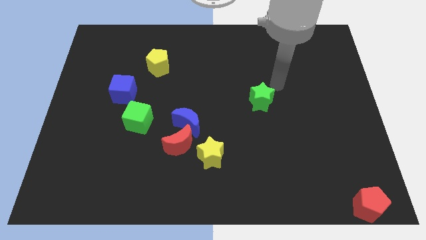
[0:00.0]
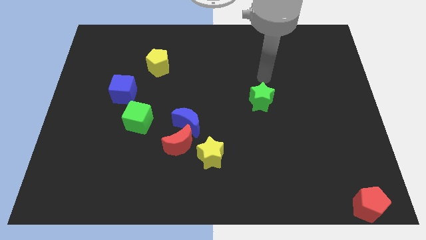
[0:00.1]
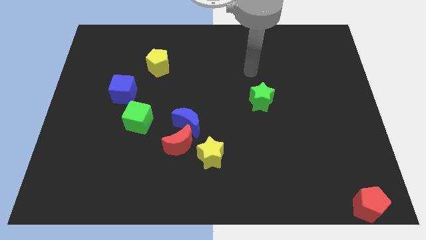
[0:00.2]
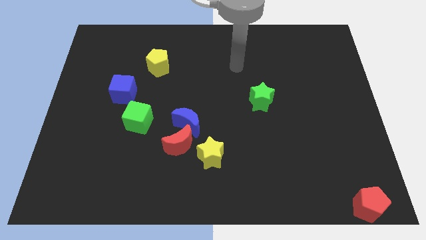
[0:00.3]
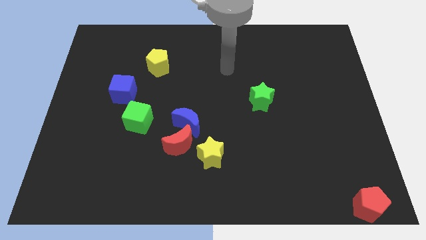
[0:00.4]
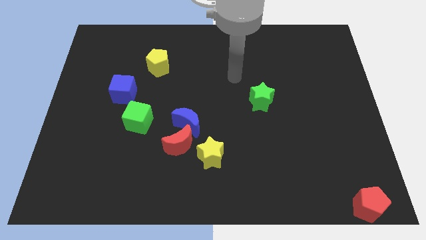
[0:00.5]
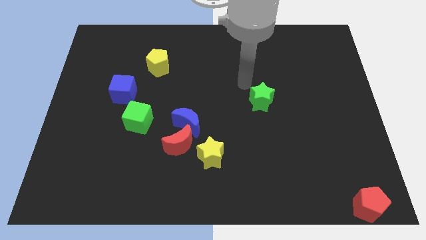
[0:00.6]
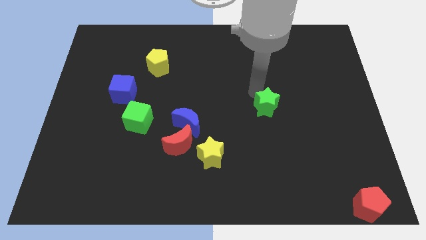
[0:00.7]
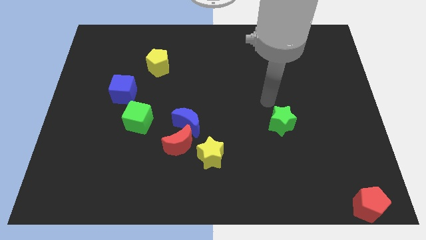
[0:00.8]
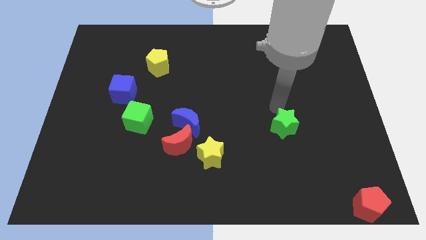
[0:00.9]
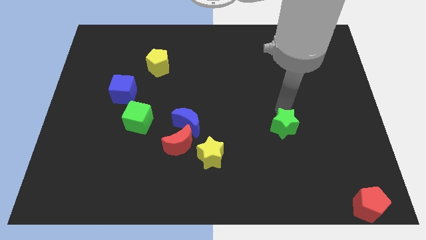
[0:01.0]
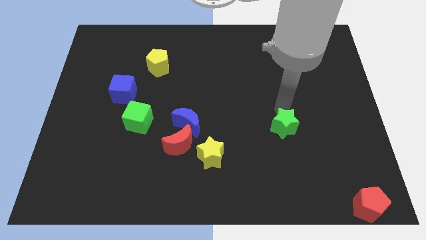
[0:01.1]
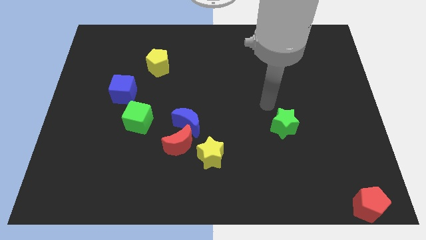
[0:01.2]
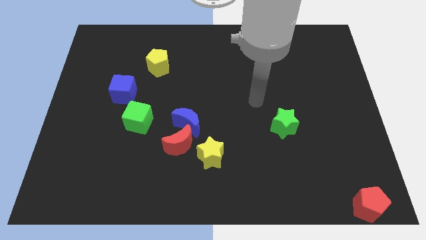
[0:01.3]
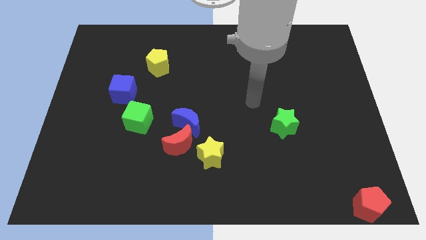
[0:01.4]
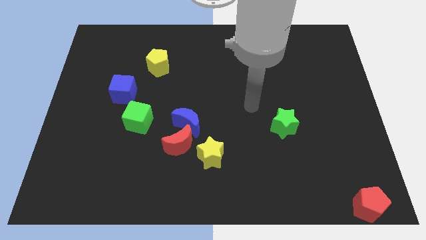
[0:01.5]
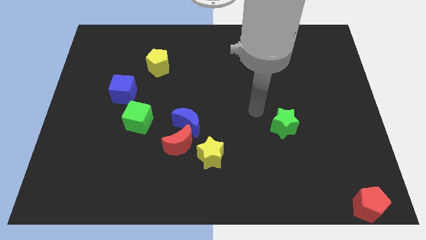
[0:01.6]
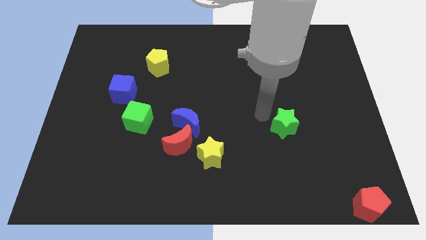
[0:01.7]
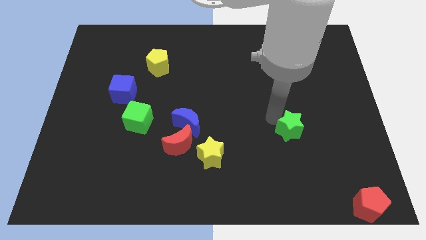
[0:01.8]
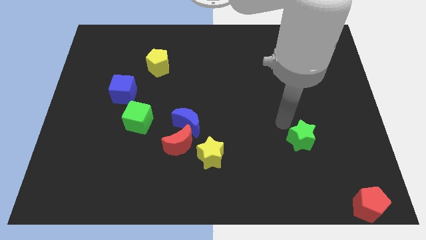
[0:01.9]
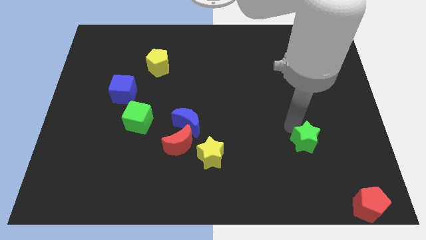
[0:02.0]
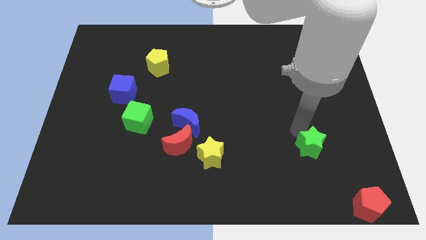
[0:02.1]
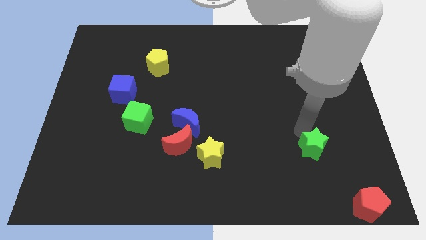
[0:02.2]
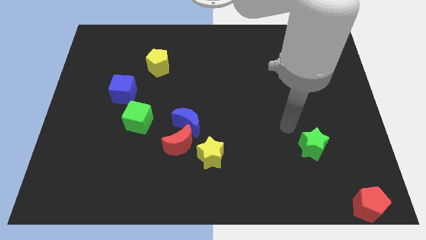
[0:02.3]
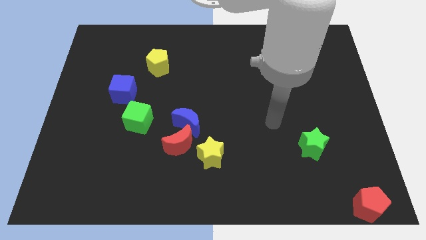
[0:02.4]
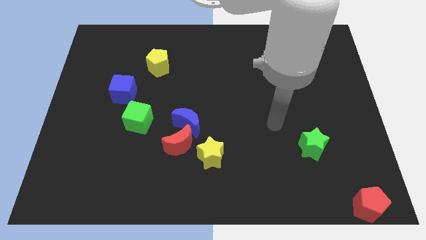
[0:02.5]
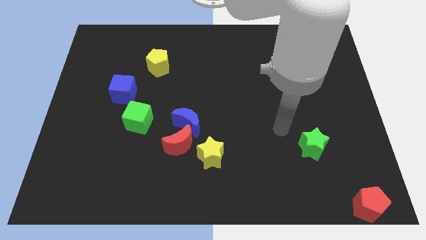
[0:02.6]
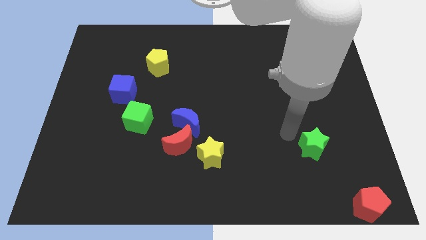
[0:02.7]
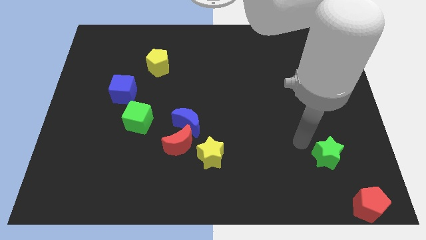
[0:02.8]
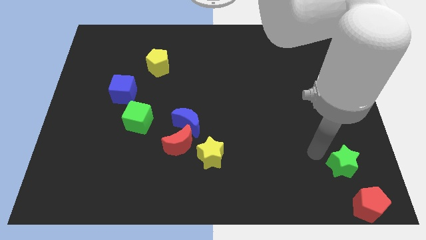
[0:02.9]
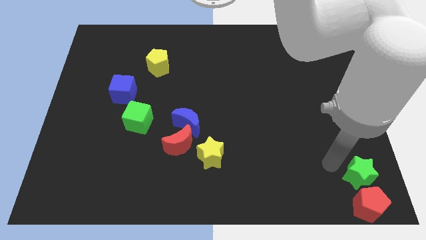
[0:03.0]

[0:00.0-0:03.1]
push green star towards red pentagon

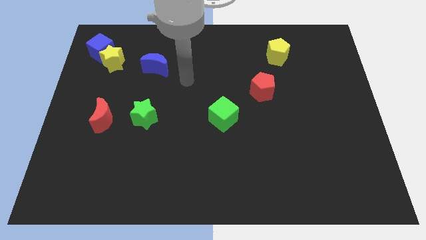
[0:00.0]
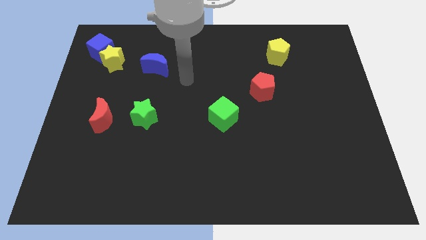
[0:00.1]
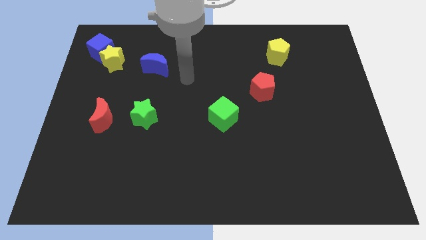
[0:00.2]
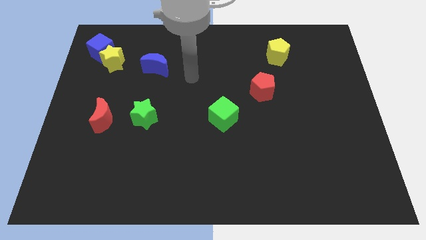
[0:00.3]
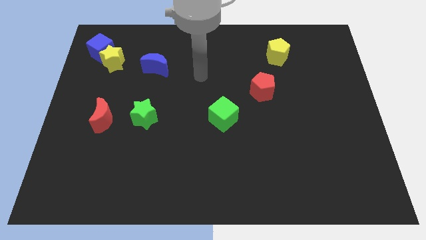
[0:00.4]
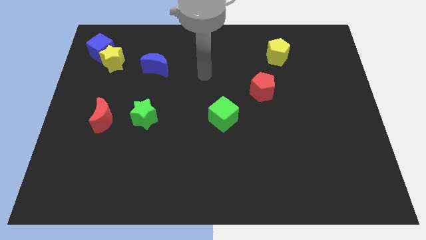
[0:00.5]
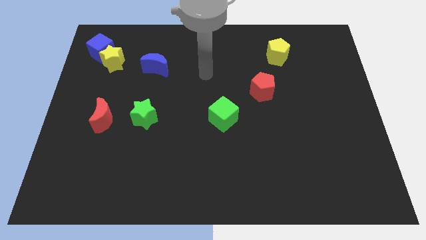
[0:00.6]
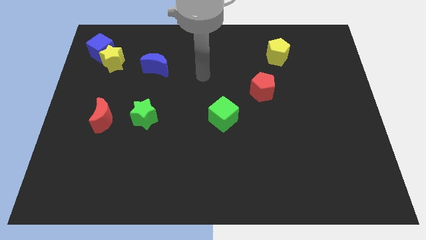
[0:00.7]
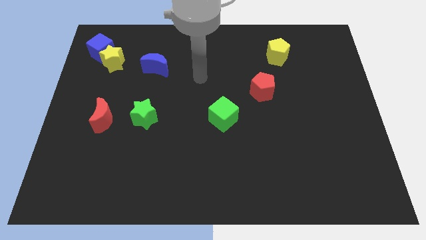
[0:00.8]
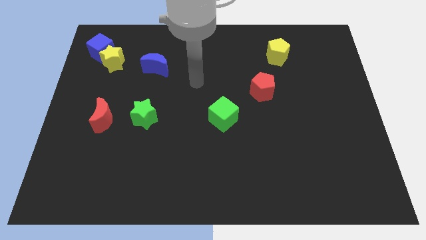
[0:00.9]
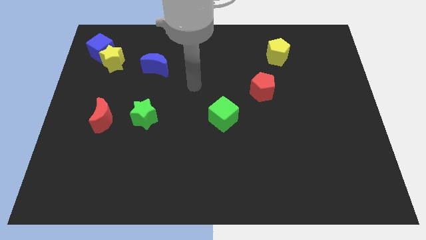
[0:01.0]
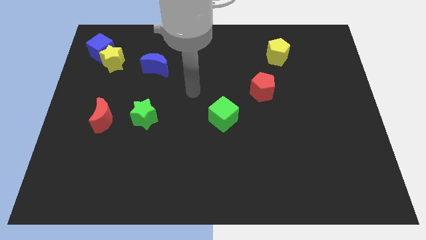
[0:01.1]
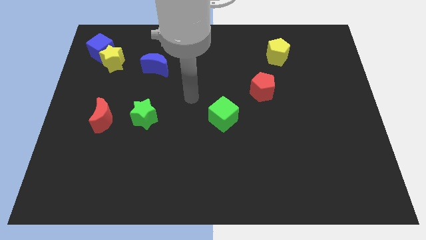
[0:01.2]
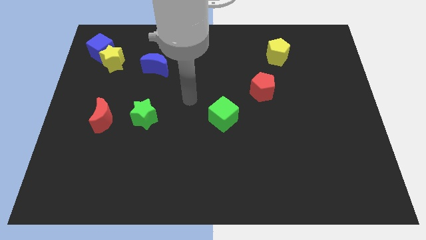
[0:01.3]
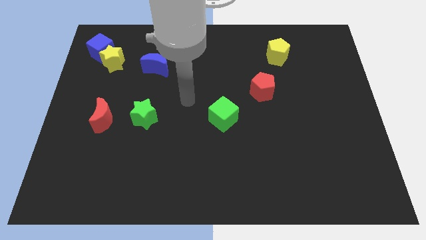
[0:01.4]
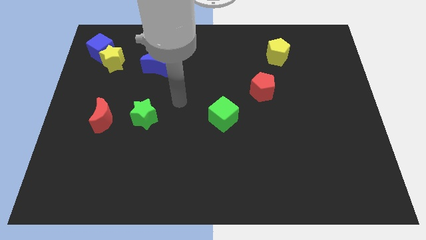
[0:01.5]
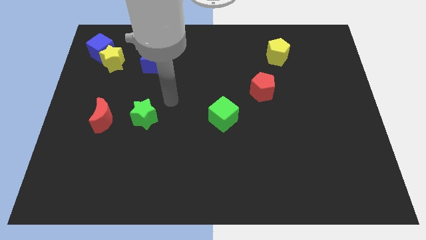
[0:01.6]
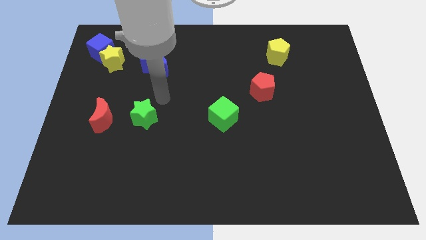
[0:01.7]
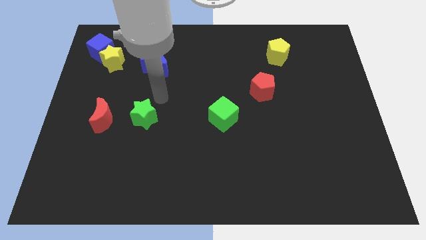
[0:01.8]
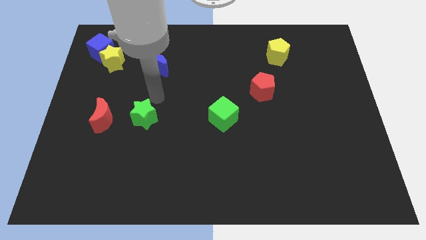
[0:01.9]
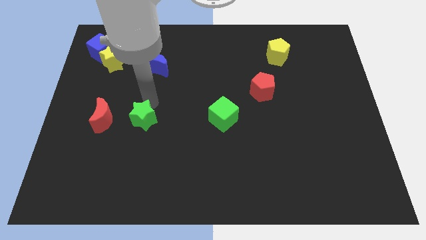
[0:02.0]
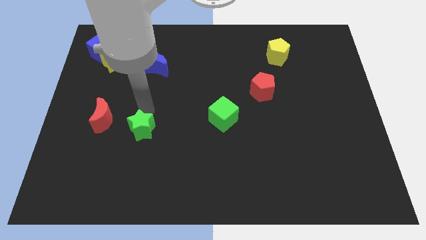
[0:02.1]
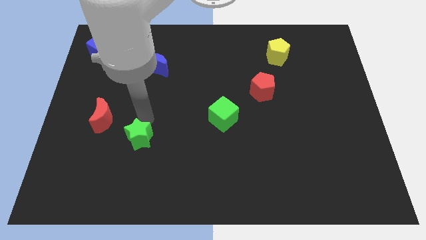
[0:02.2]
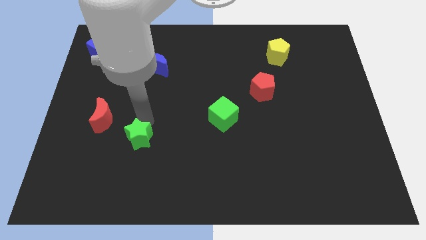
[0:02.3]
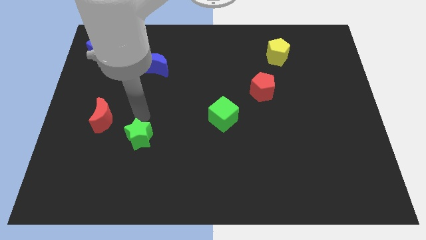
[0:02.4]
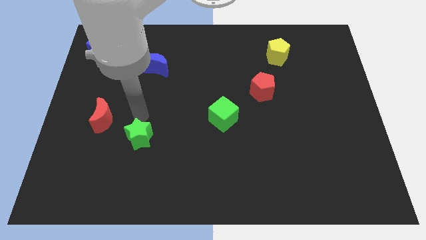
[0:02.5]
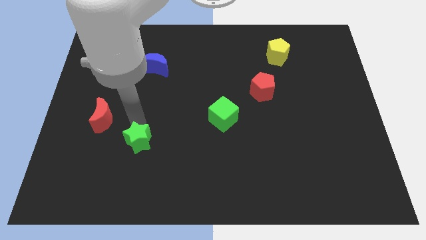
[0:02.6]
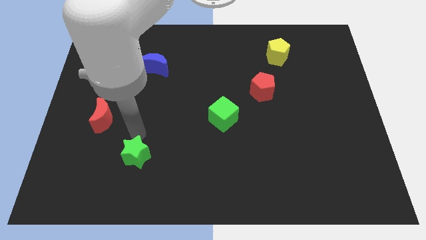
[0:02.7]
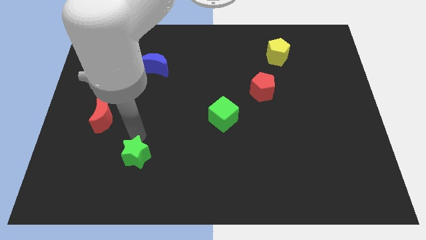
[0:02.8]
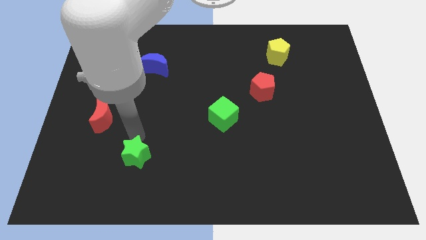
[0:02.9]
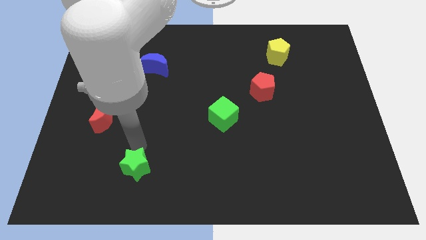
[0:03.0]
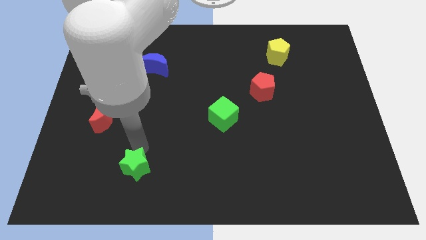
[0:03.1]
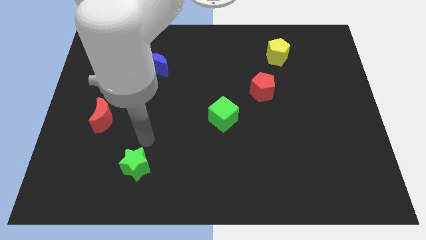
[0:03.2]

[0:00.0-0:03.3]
push the green star towards bottom of the board

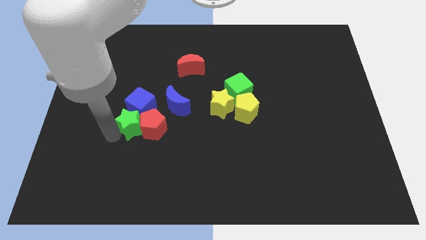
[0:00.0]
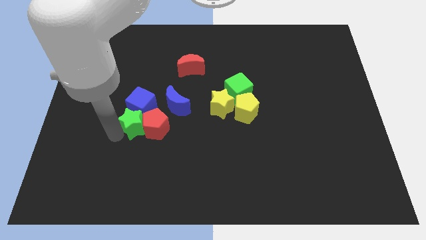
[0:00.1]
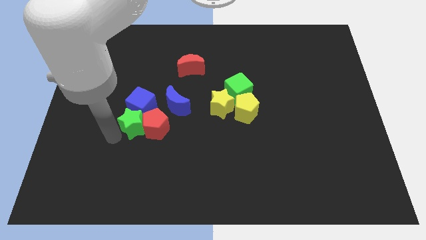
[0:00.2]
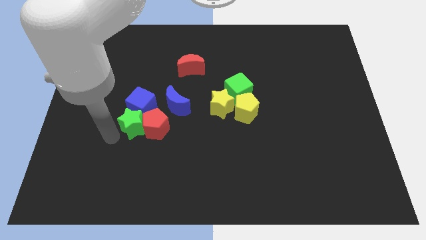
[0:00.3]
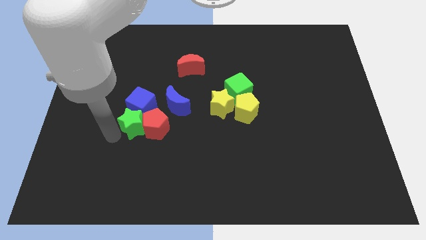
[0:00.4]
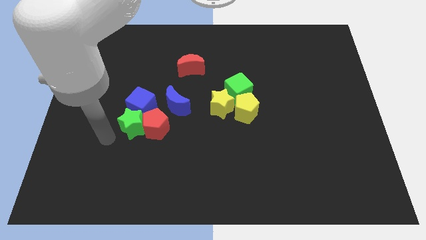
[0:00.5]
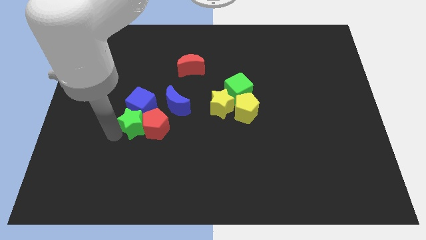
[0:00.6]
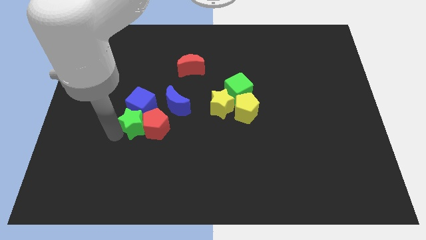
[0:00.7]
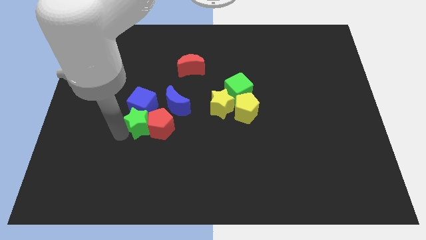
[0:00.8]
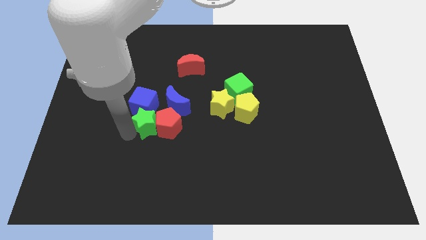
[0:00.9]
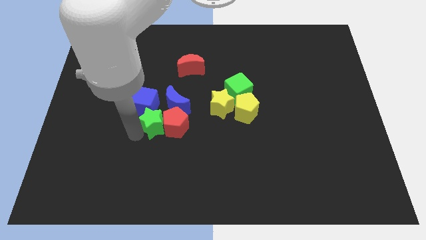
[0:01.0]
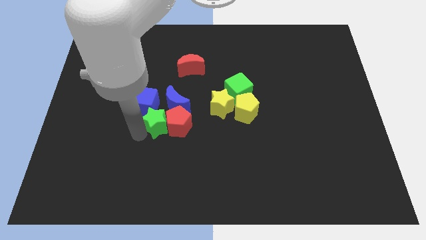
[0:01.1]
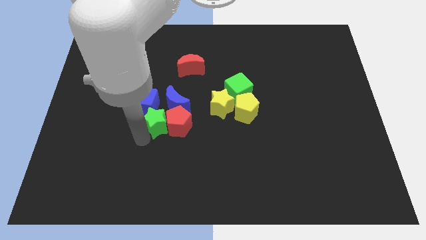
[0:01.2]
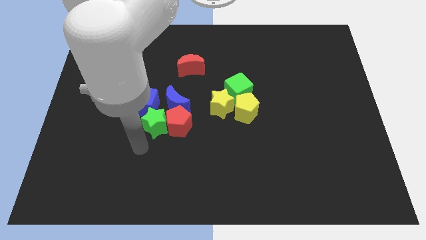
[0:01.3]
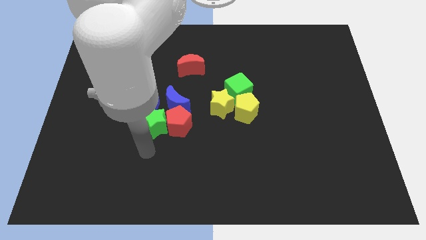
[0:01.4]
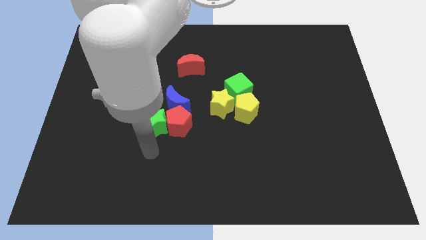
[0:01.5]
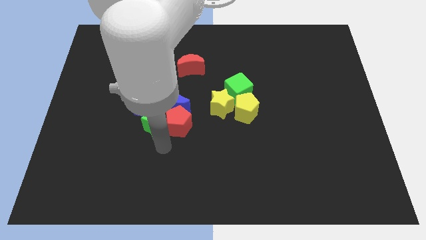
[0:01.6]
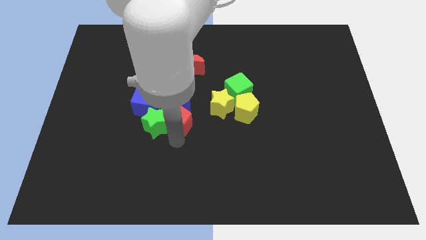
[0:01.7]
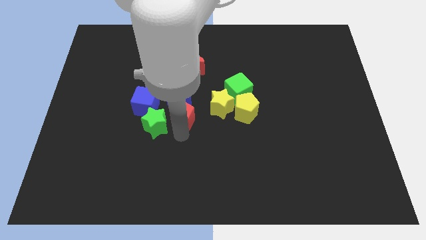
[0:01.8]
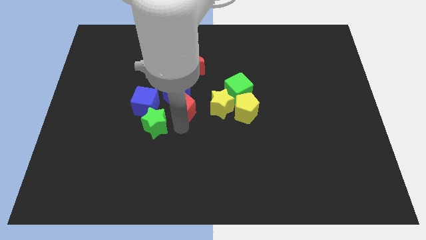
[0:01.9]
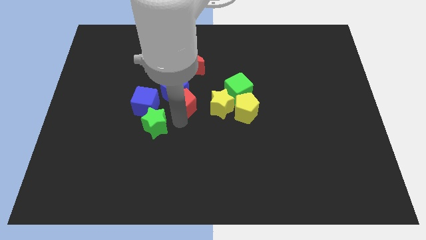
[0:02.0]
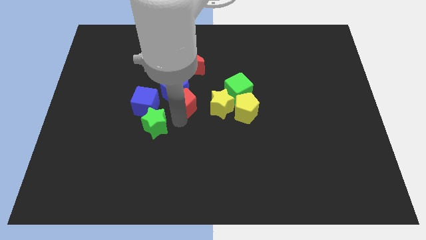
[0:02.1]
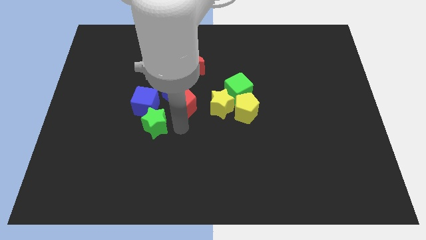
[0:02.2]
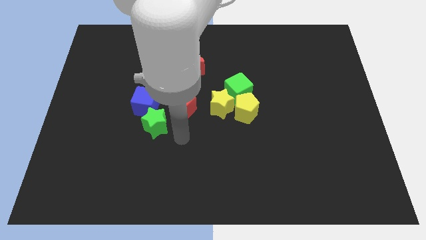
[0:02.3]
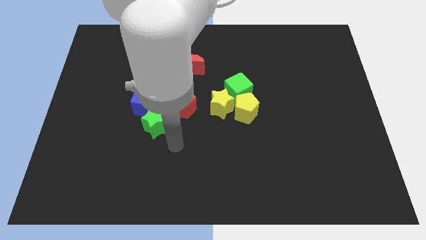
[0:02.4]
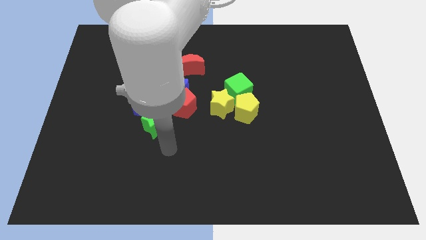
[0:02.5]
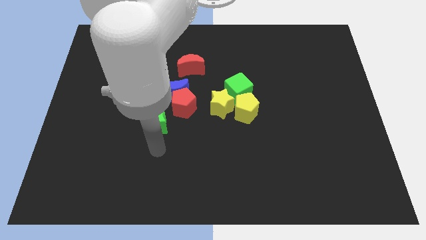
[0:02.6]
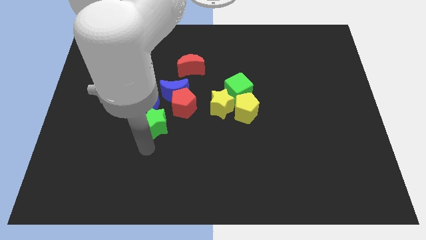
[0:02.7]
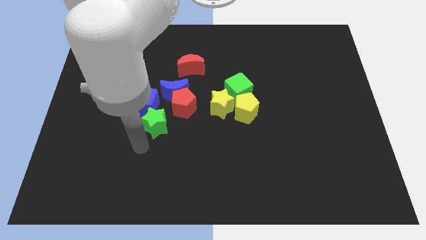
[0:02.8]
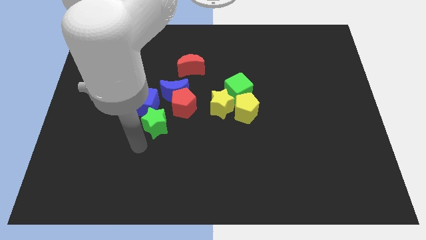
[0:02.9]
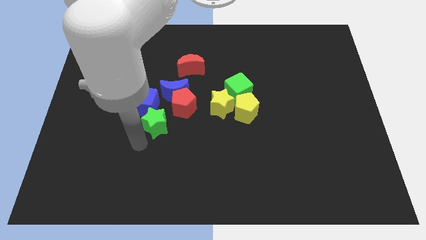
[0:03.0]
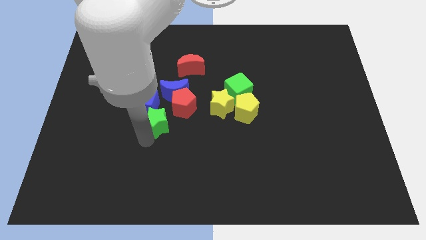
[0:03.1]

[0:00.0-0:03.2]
push the red pentagon to the bottom of the blue crescent
